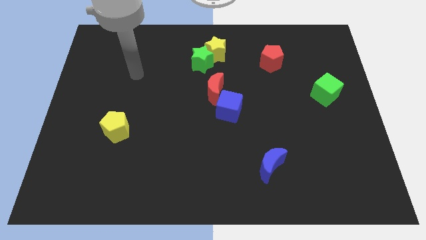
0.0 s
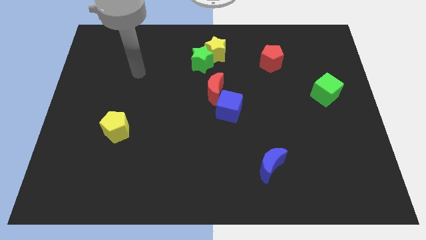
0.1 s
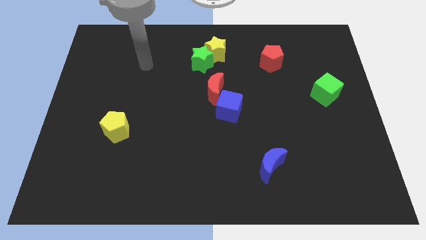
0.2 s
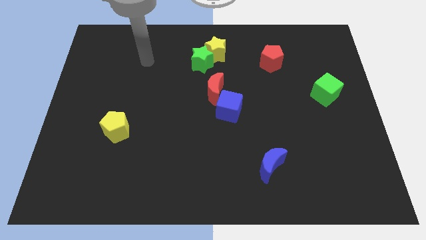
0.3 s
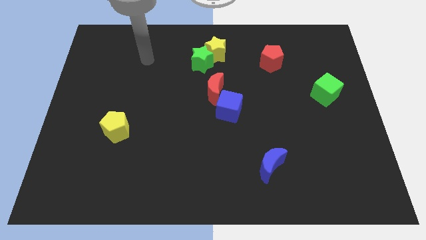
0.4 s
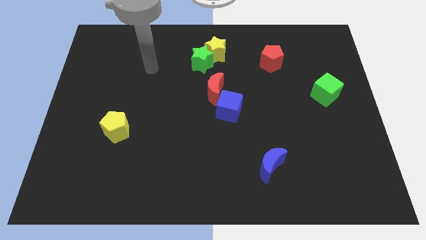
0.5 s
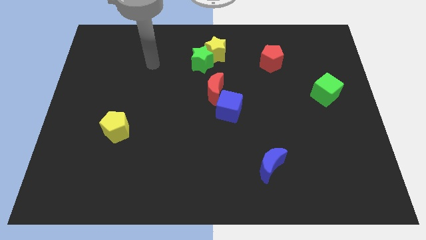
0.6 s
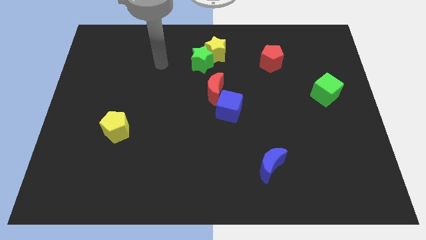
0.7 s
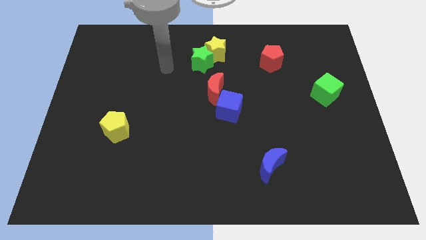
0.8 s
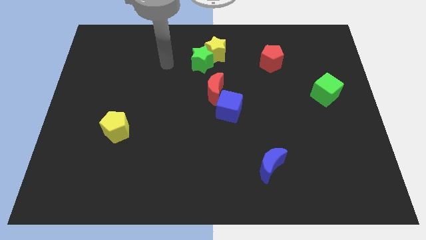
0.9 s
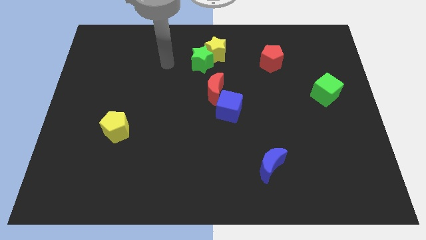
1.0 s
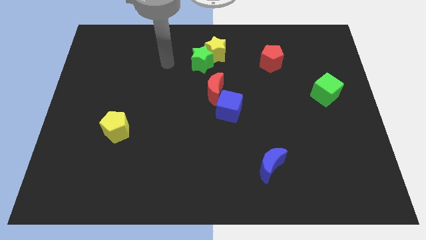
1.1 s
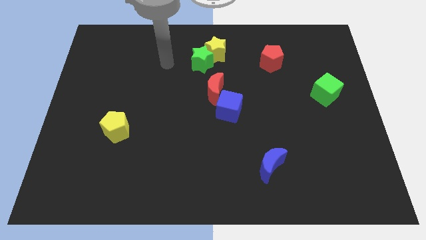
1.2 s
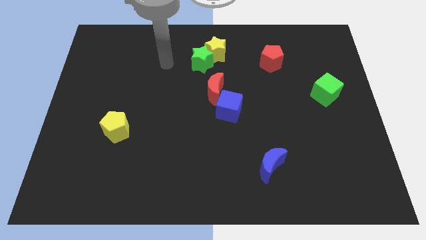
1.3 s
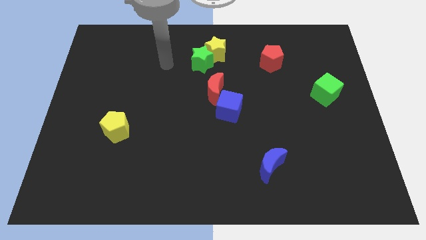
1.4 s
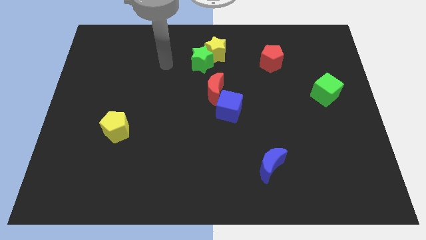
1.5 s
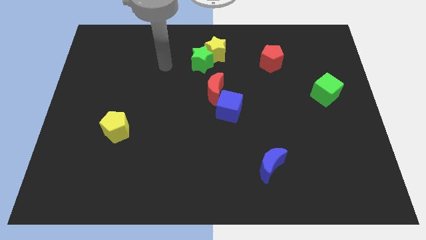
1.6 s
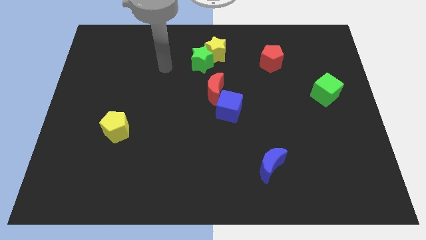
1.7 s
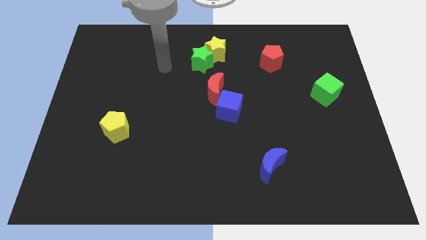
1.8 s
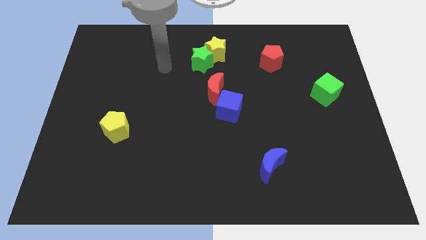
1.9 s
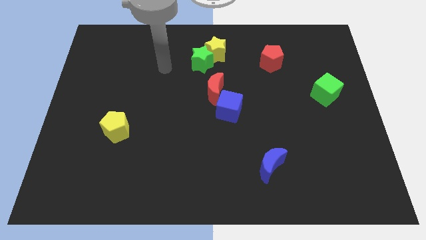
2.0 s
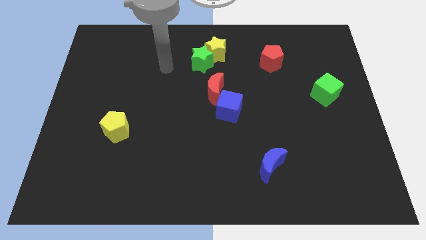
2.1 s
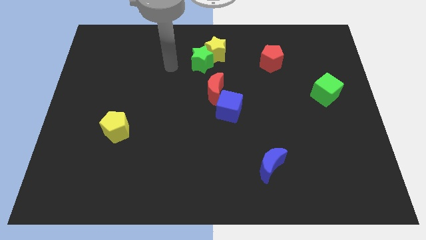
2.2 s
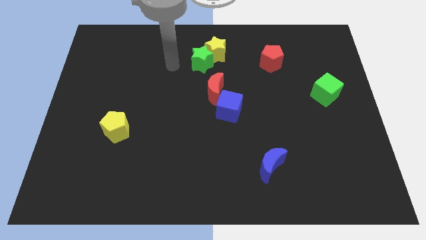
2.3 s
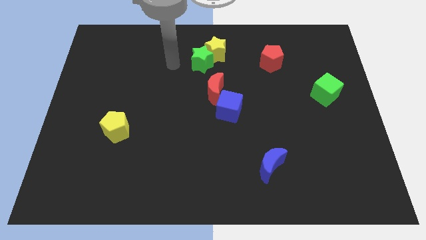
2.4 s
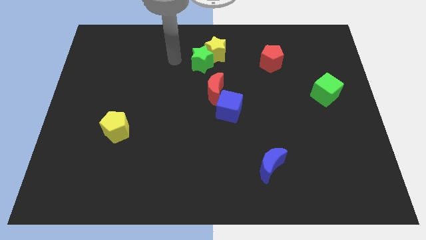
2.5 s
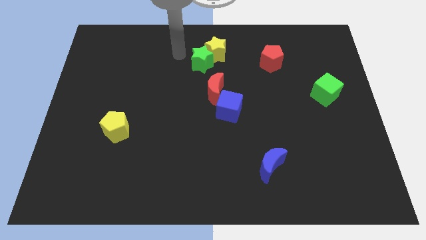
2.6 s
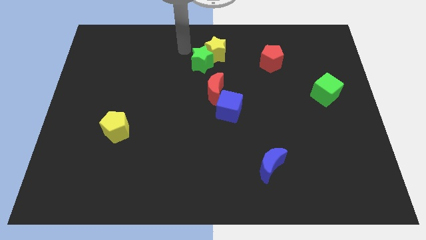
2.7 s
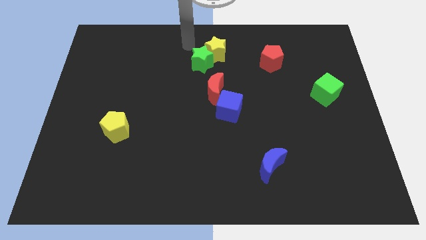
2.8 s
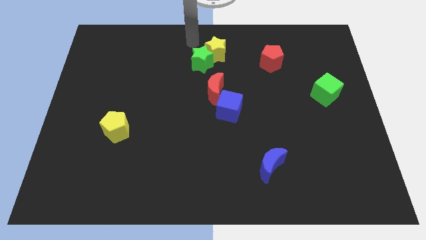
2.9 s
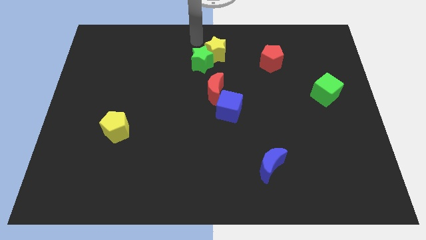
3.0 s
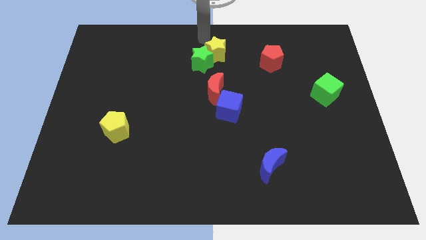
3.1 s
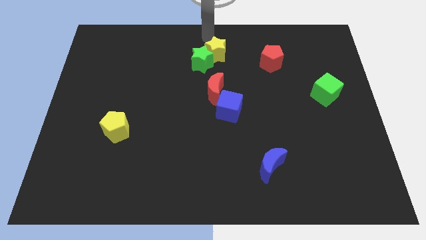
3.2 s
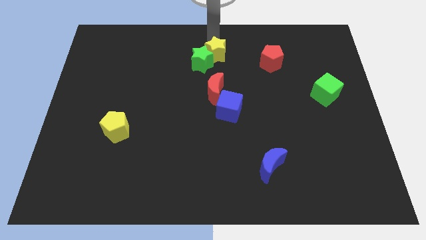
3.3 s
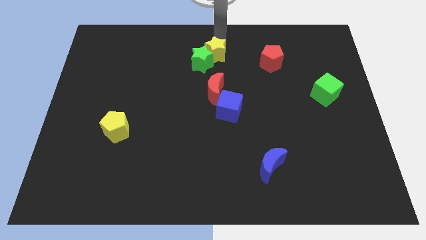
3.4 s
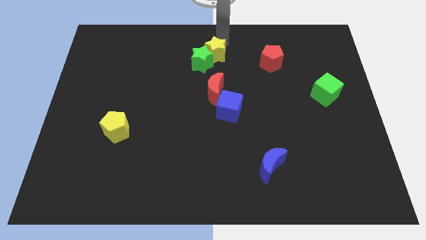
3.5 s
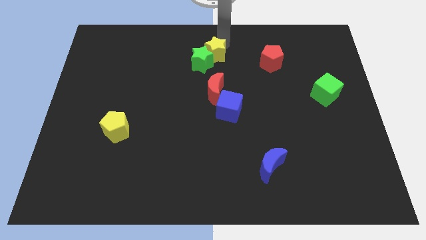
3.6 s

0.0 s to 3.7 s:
place pointer at the top of the yellow star

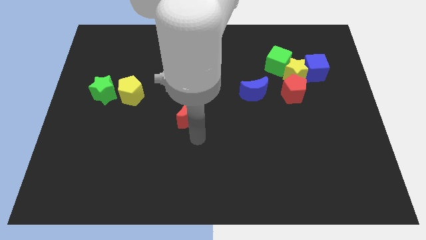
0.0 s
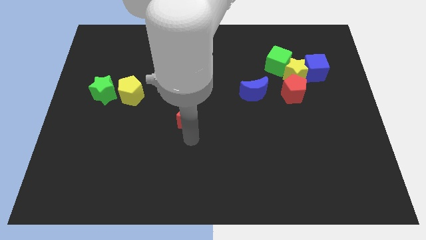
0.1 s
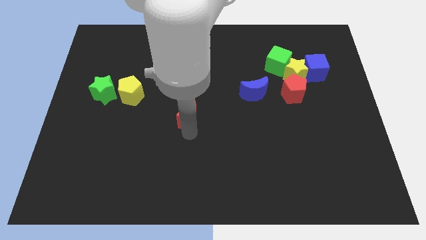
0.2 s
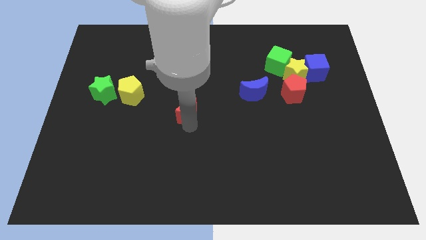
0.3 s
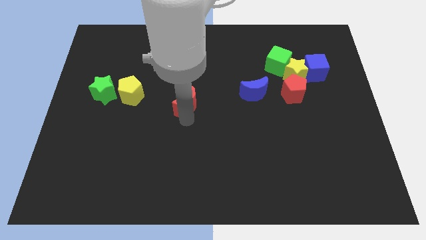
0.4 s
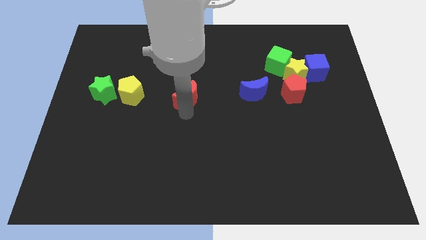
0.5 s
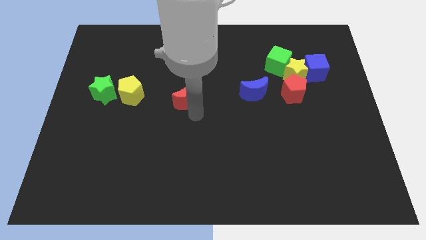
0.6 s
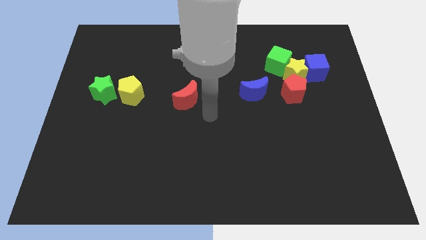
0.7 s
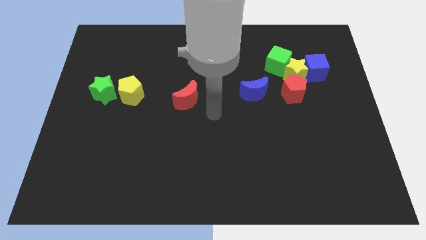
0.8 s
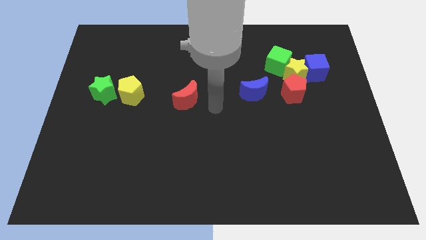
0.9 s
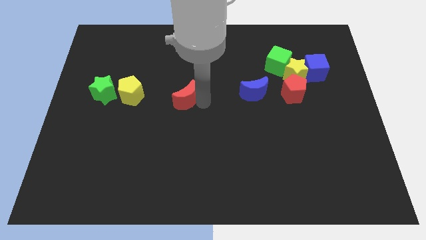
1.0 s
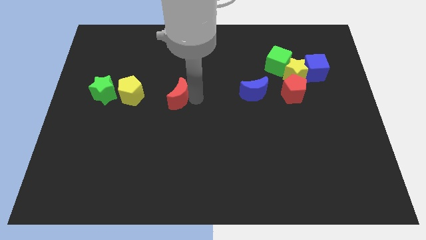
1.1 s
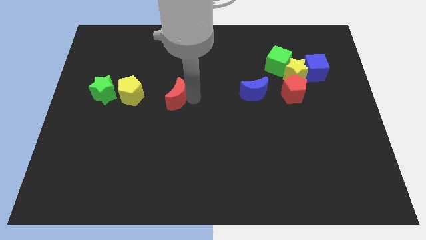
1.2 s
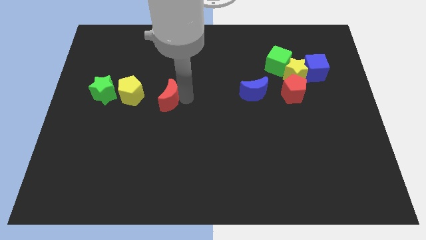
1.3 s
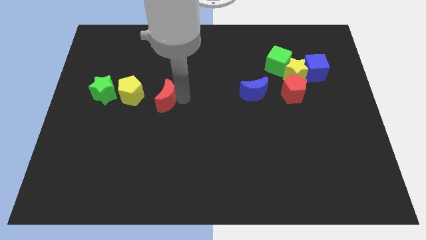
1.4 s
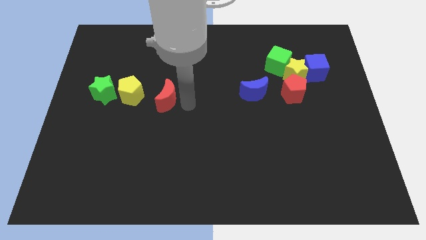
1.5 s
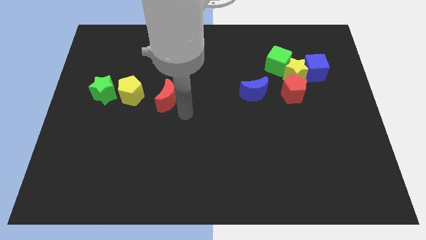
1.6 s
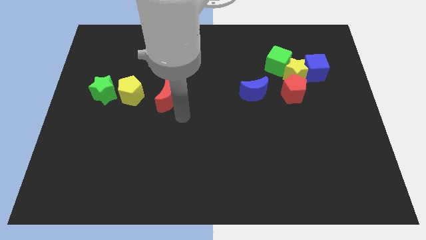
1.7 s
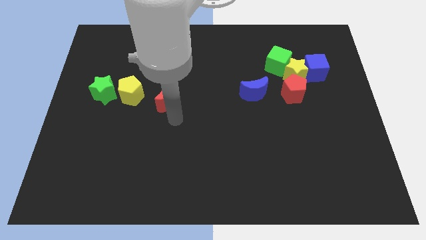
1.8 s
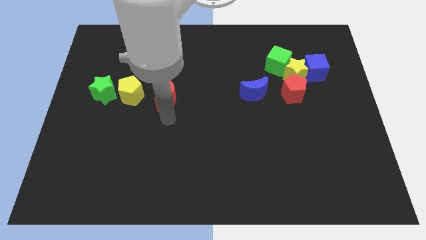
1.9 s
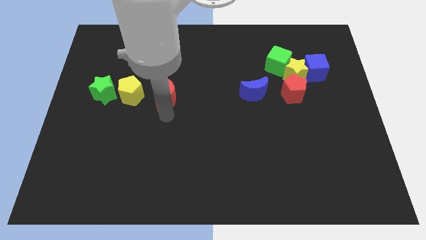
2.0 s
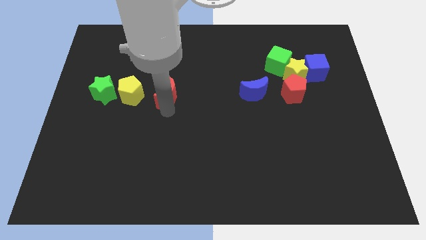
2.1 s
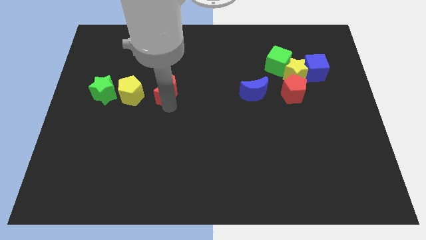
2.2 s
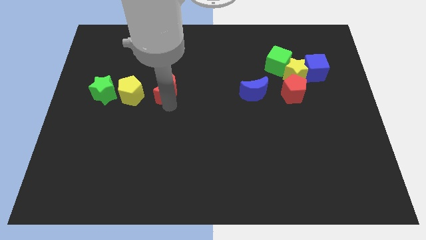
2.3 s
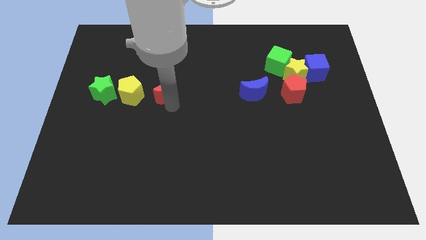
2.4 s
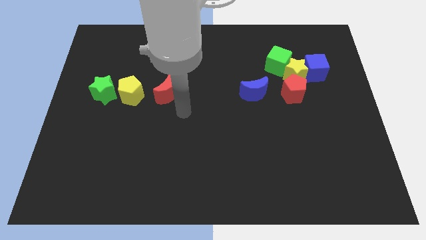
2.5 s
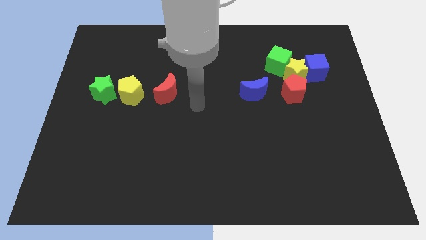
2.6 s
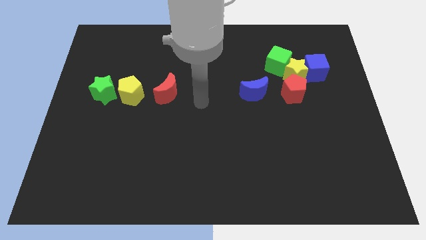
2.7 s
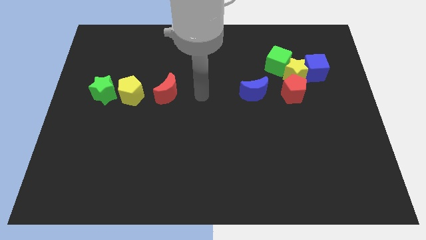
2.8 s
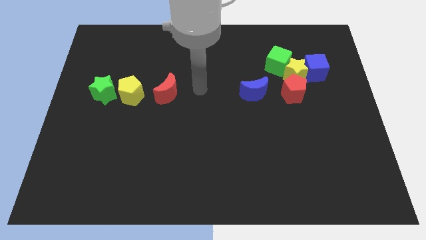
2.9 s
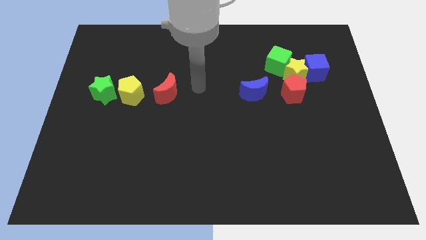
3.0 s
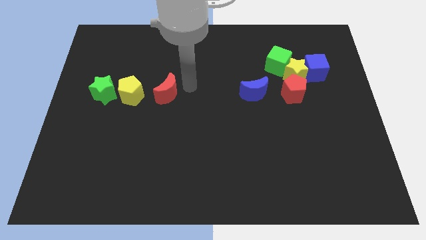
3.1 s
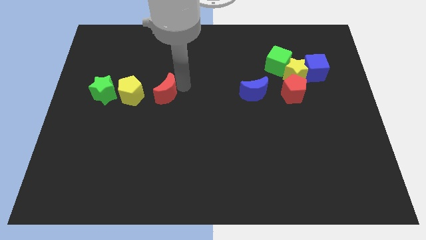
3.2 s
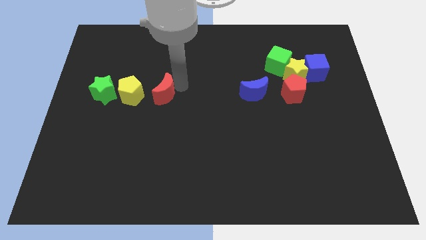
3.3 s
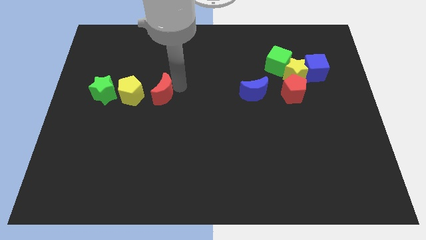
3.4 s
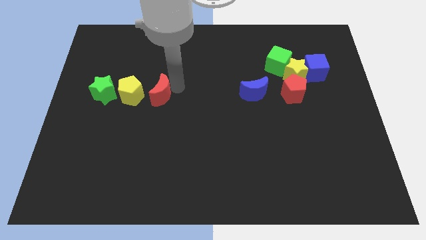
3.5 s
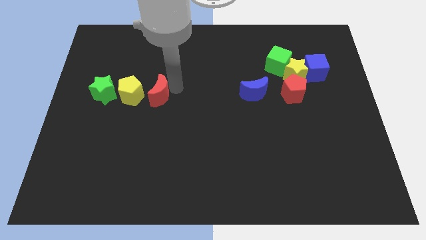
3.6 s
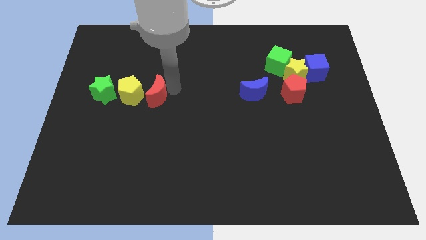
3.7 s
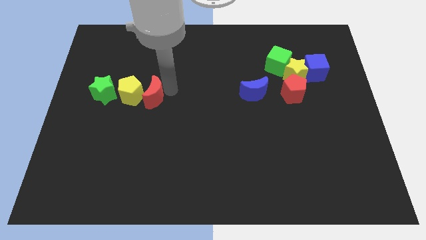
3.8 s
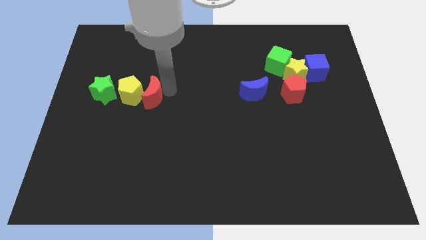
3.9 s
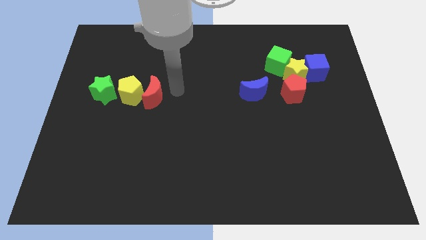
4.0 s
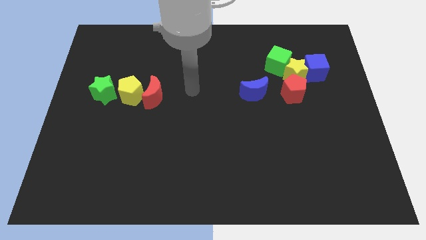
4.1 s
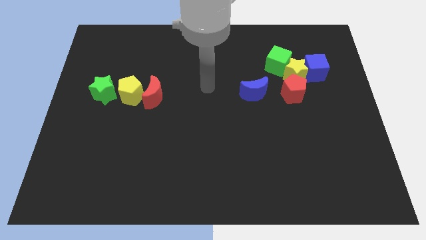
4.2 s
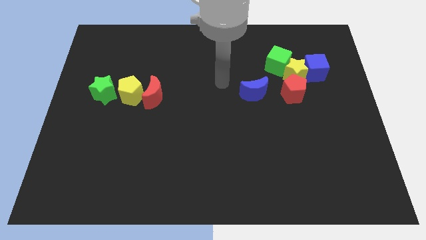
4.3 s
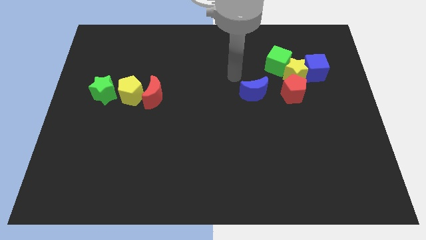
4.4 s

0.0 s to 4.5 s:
place the red moon to the left of the yellow pentagon

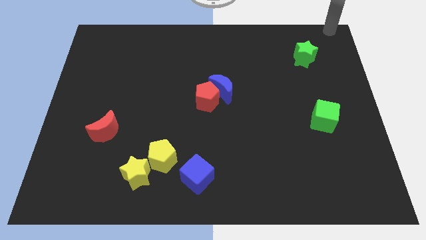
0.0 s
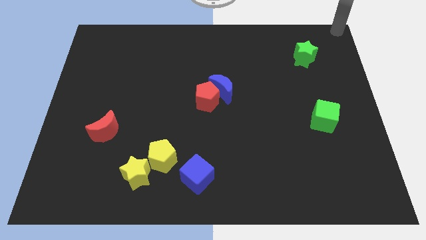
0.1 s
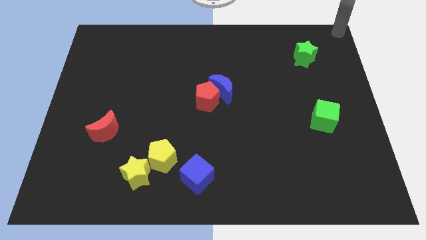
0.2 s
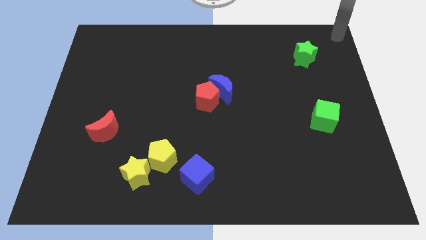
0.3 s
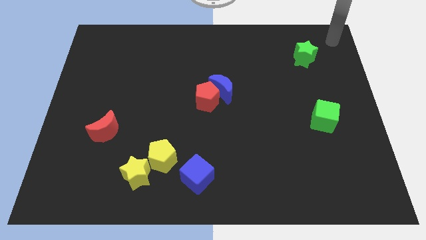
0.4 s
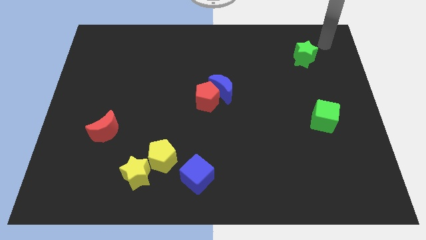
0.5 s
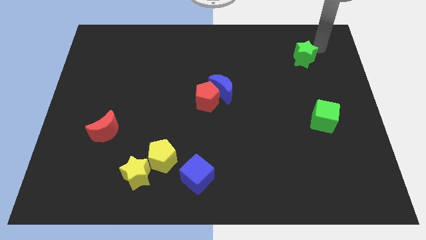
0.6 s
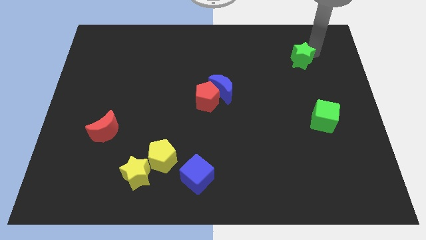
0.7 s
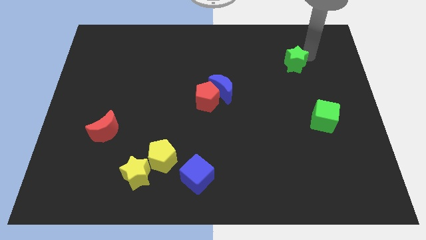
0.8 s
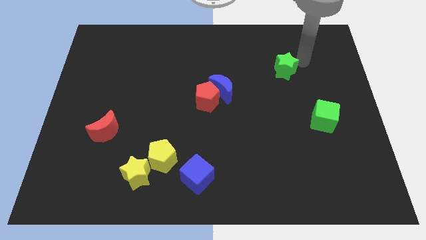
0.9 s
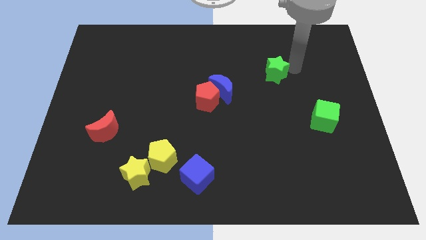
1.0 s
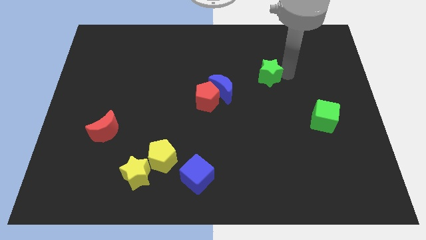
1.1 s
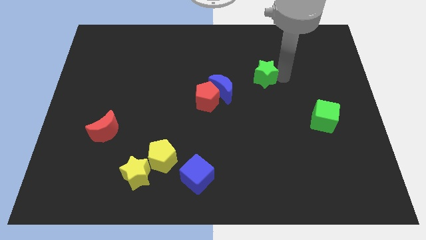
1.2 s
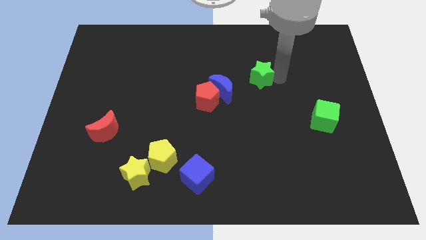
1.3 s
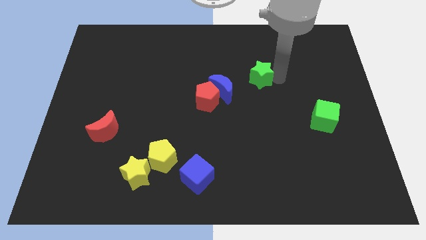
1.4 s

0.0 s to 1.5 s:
push the green star to the top left of the green cube
